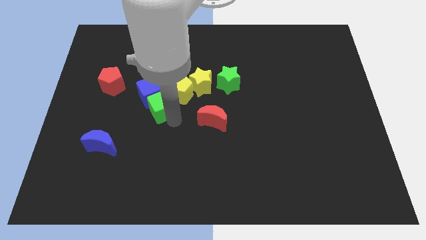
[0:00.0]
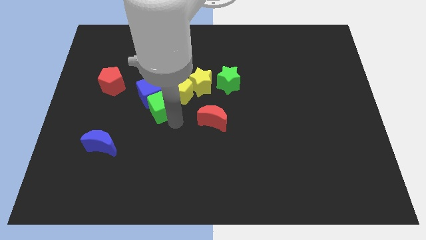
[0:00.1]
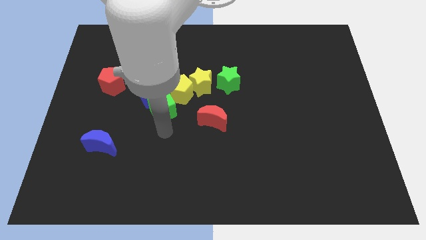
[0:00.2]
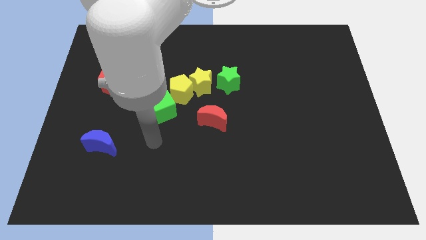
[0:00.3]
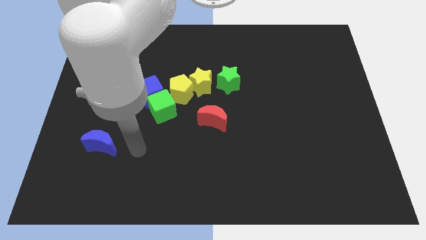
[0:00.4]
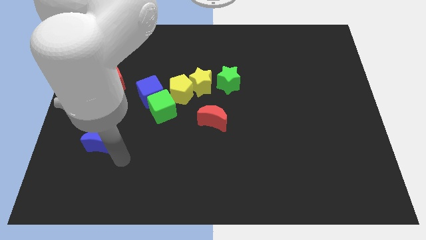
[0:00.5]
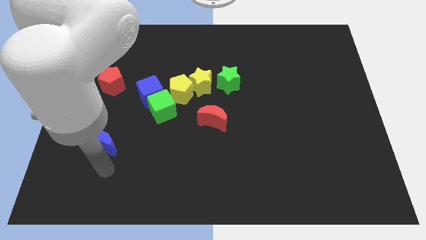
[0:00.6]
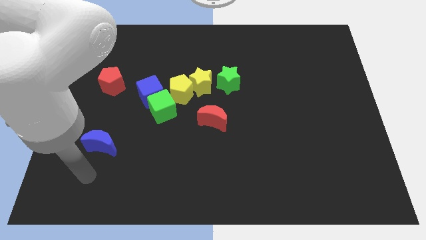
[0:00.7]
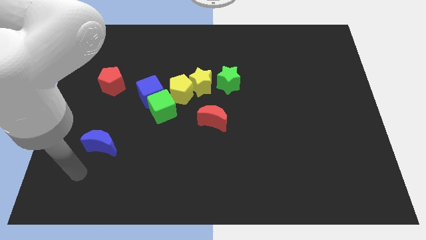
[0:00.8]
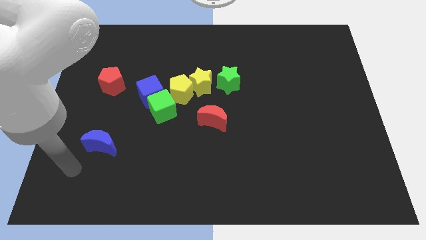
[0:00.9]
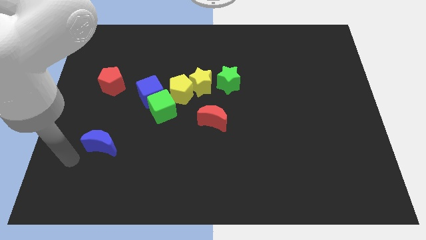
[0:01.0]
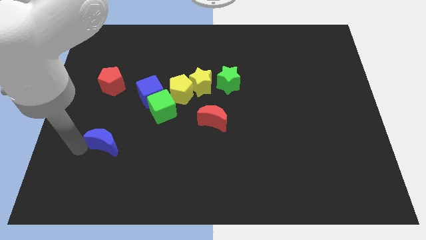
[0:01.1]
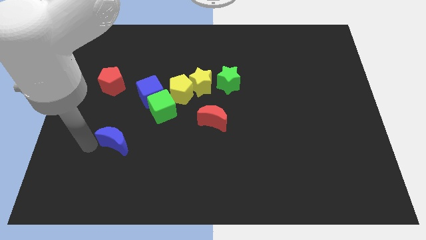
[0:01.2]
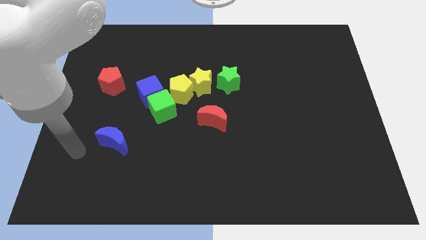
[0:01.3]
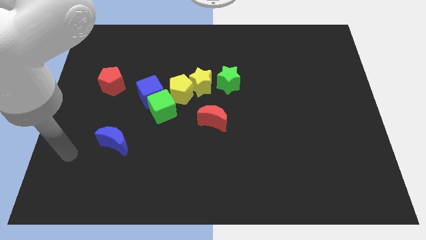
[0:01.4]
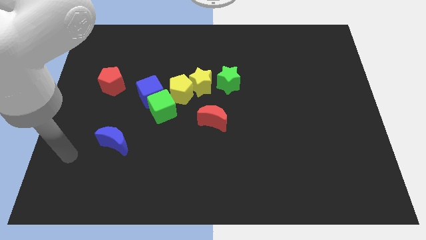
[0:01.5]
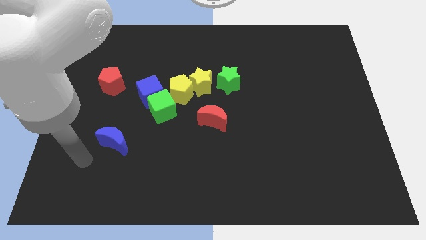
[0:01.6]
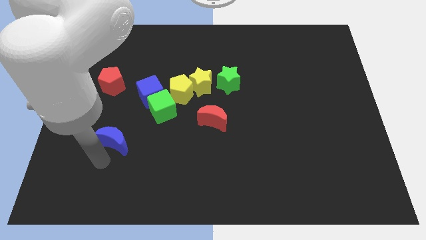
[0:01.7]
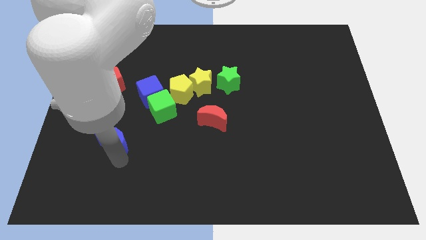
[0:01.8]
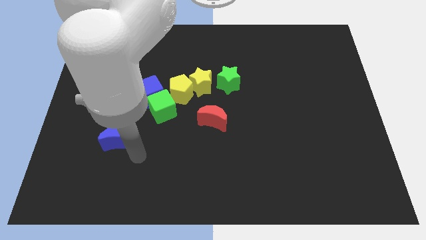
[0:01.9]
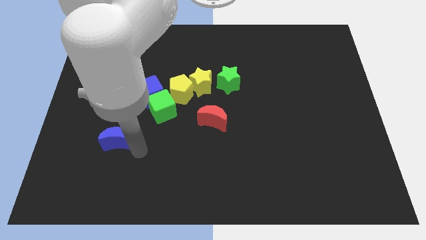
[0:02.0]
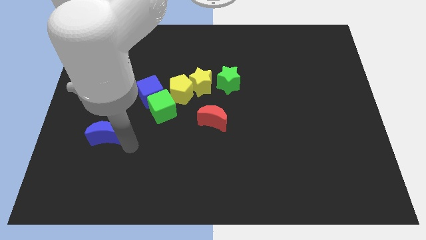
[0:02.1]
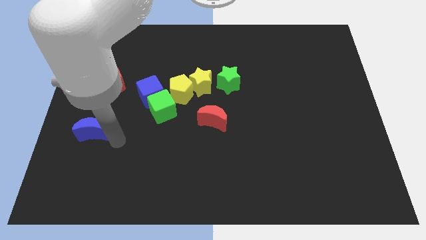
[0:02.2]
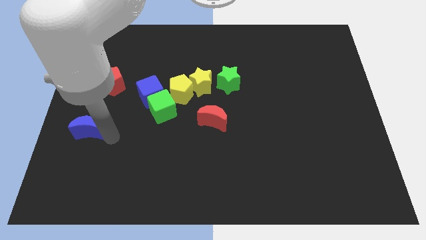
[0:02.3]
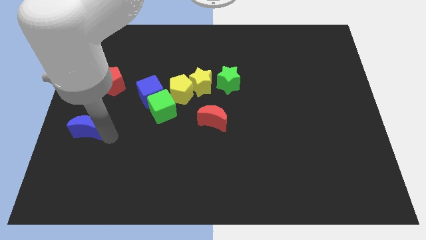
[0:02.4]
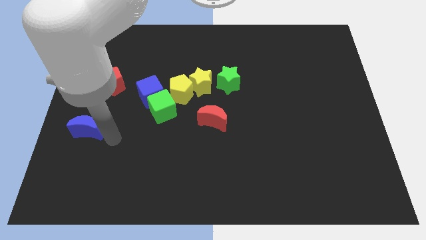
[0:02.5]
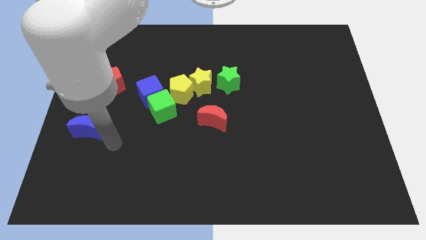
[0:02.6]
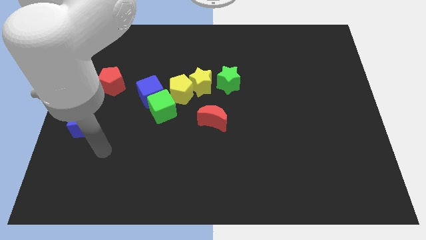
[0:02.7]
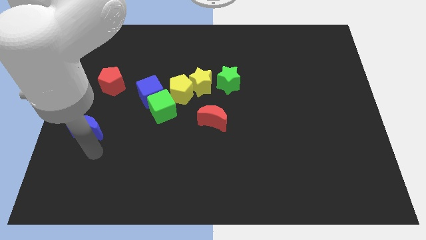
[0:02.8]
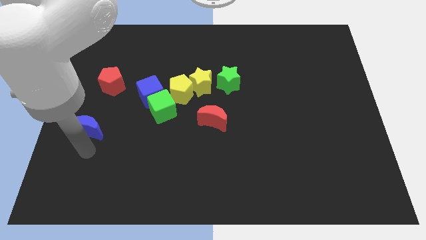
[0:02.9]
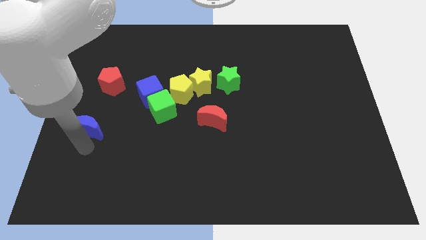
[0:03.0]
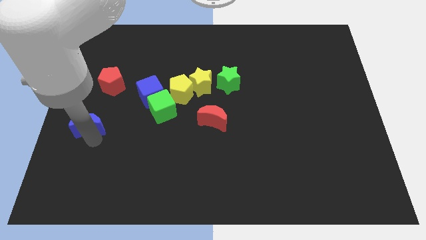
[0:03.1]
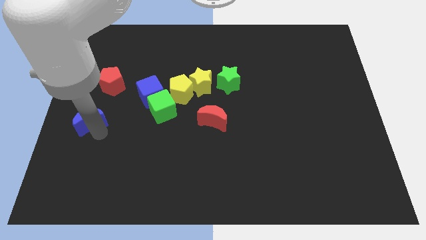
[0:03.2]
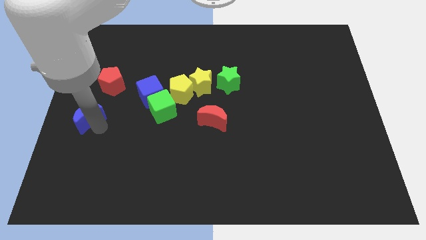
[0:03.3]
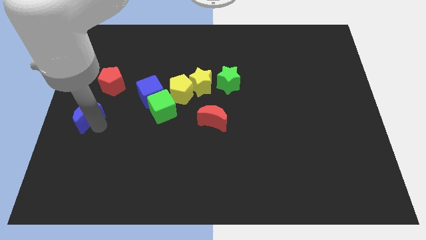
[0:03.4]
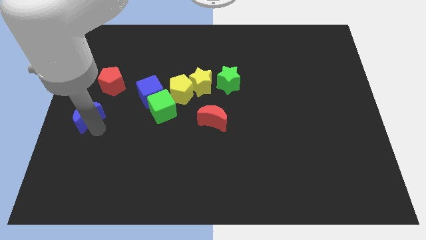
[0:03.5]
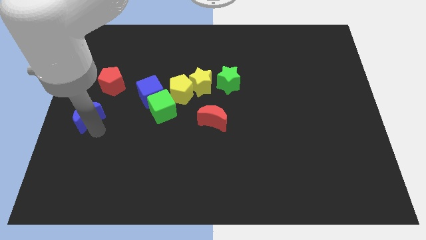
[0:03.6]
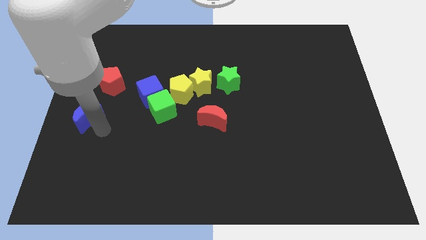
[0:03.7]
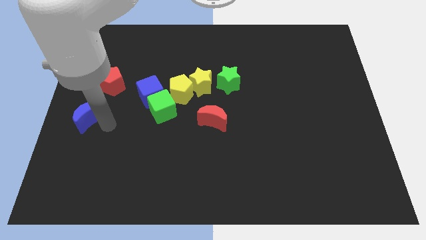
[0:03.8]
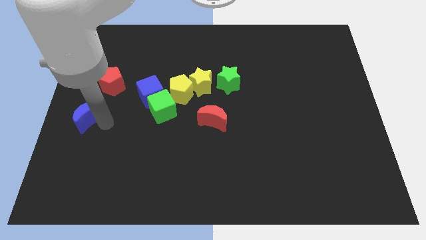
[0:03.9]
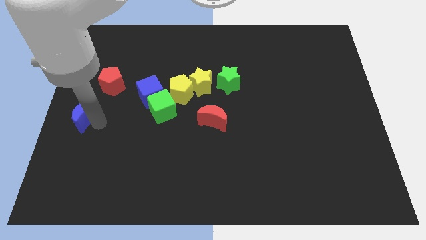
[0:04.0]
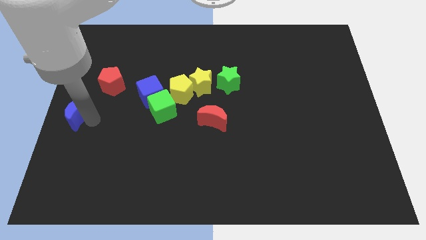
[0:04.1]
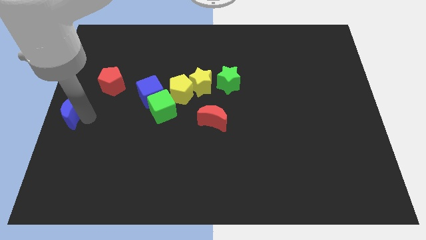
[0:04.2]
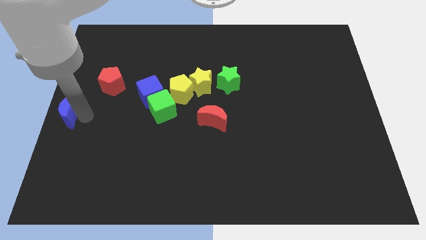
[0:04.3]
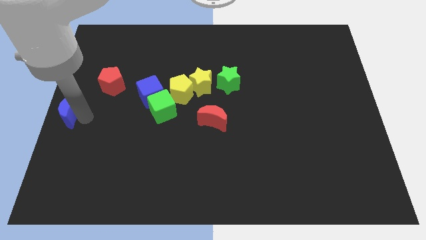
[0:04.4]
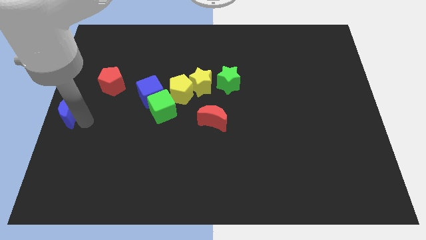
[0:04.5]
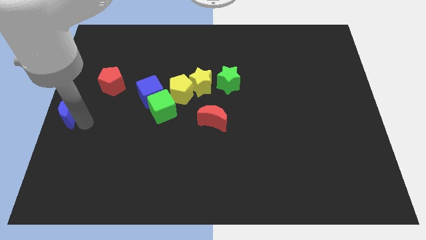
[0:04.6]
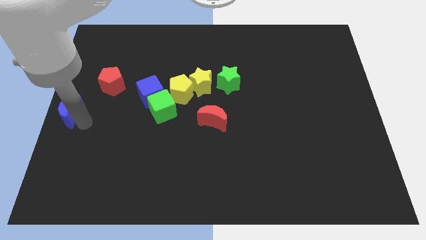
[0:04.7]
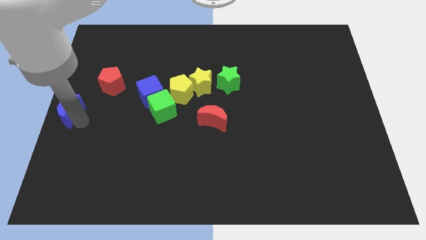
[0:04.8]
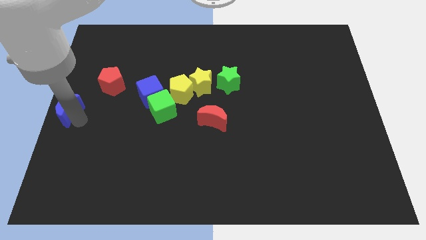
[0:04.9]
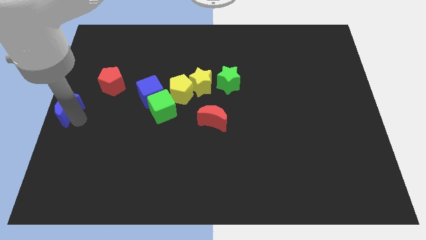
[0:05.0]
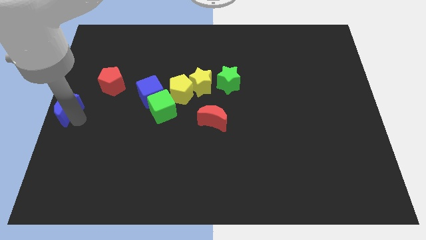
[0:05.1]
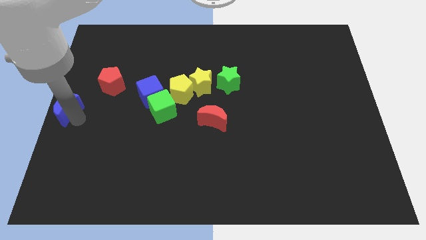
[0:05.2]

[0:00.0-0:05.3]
move the blue crescent to the center left of the board

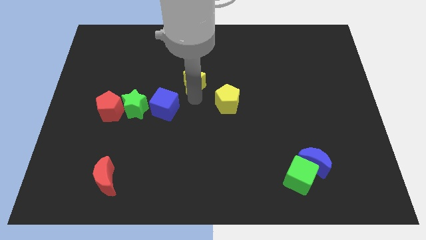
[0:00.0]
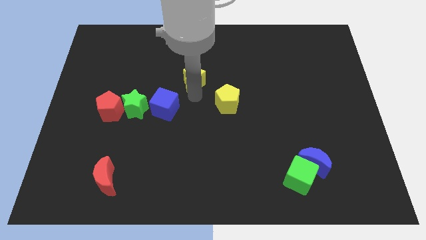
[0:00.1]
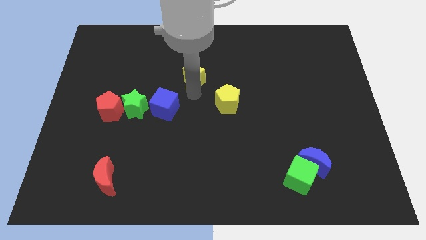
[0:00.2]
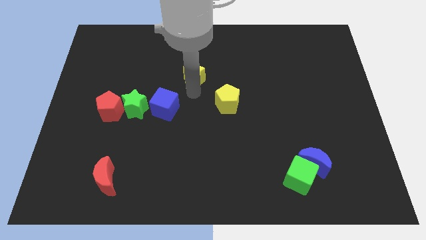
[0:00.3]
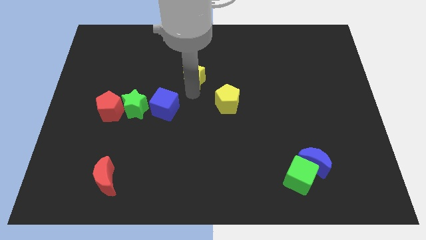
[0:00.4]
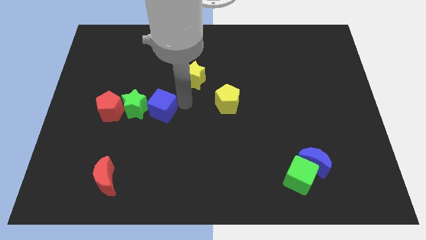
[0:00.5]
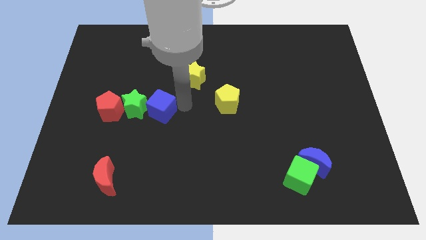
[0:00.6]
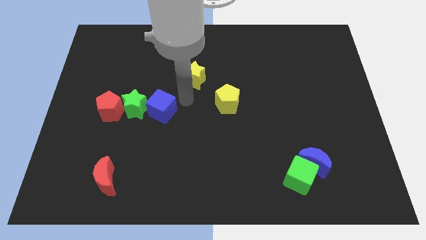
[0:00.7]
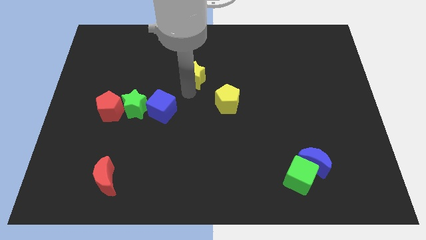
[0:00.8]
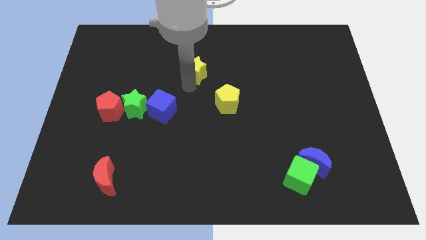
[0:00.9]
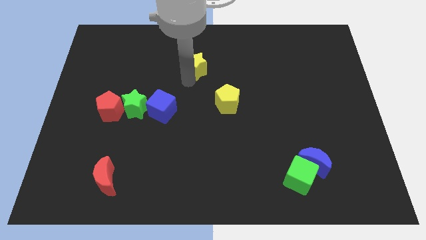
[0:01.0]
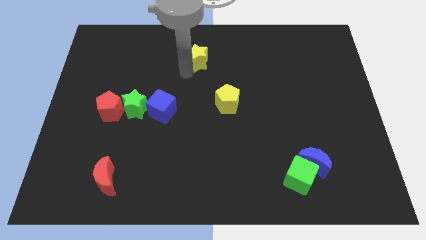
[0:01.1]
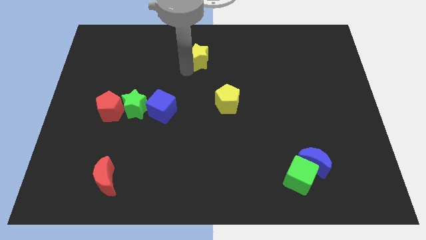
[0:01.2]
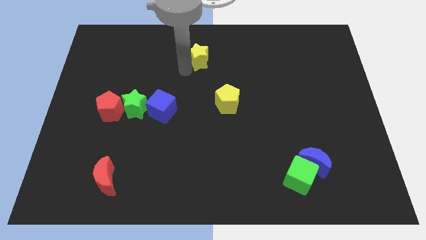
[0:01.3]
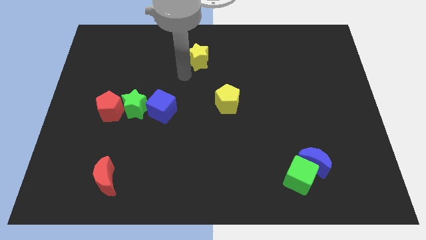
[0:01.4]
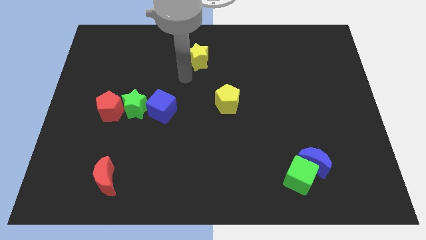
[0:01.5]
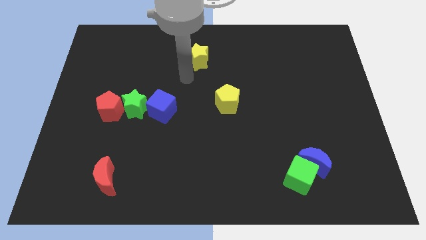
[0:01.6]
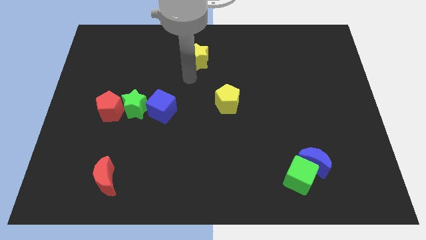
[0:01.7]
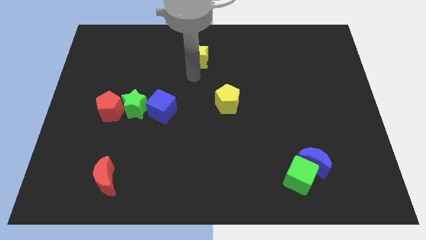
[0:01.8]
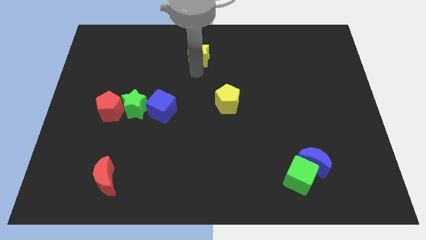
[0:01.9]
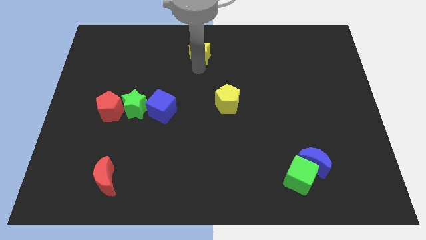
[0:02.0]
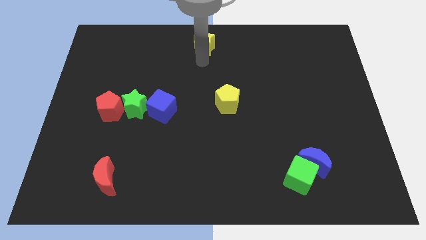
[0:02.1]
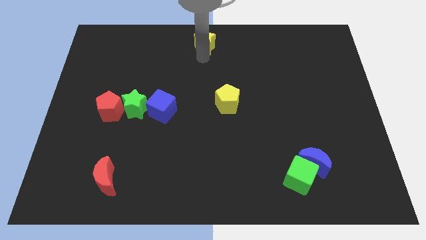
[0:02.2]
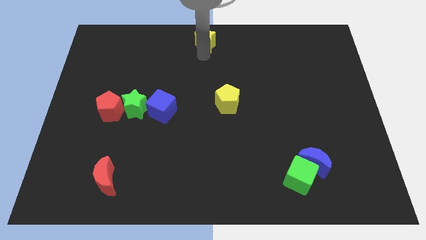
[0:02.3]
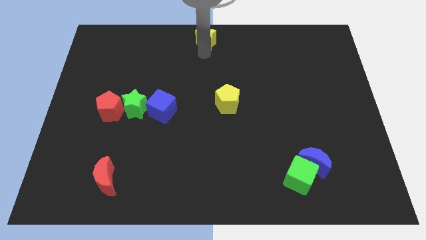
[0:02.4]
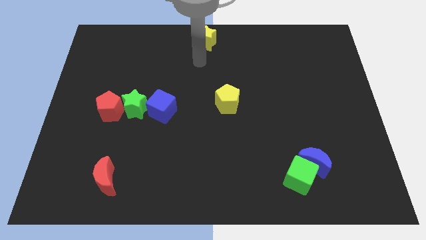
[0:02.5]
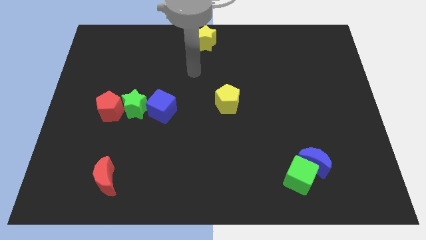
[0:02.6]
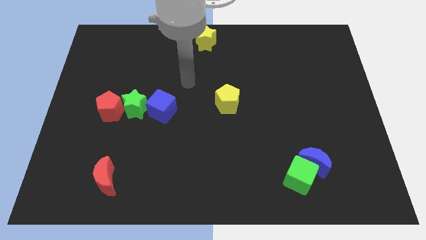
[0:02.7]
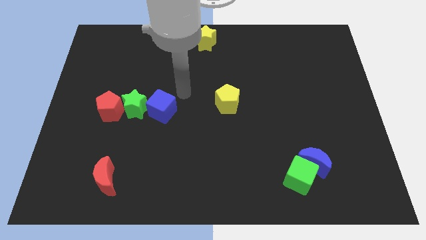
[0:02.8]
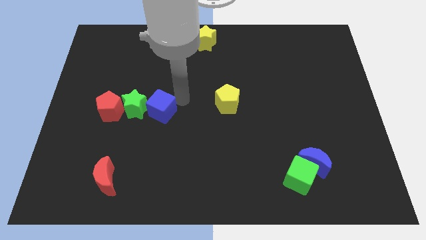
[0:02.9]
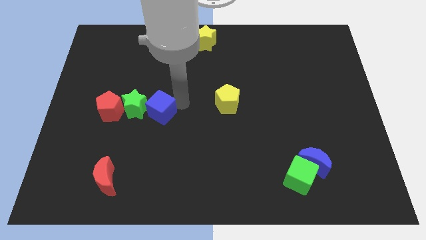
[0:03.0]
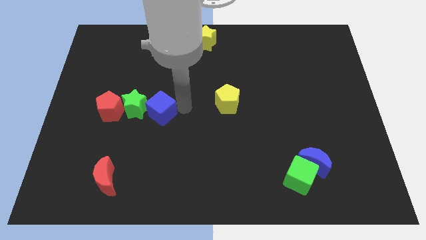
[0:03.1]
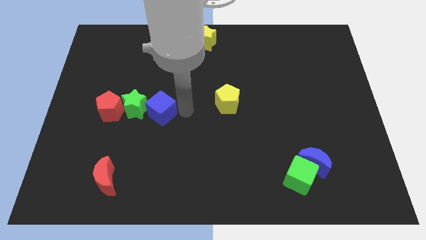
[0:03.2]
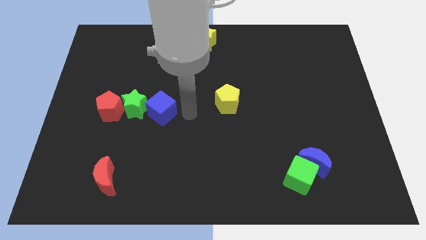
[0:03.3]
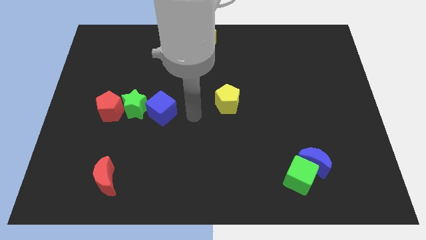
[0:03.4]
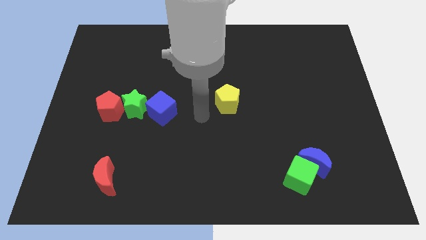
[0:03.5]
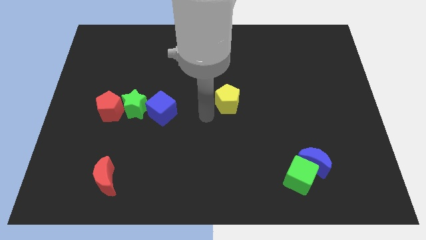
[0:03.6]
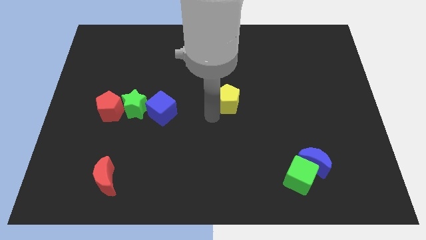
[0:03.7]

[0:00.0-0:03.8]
push the yellow star to the top center of the board
